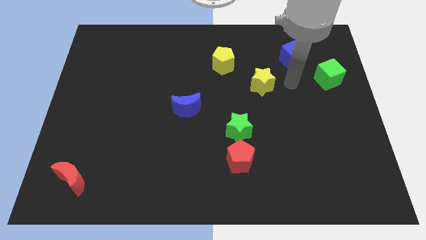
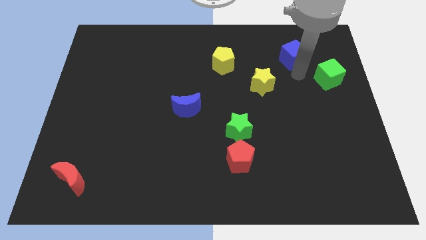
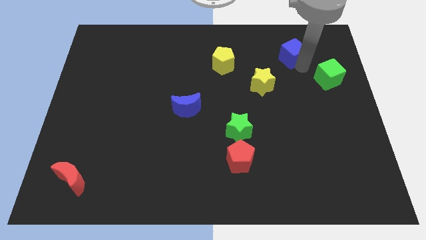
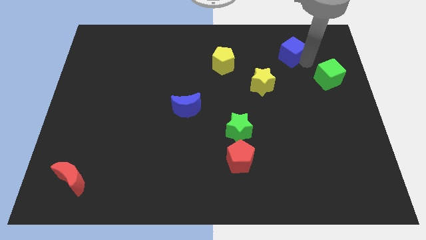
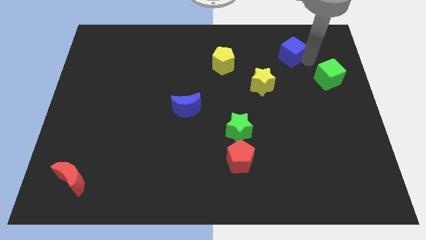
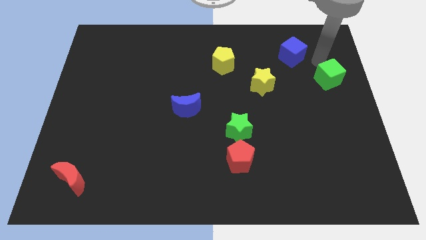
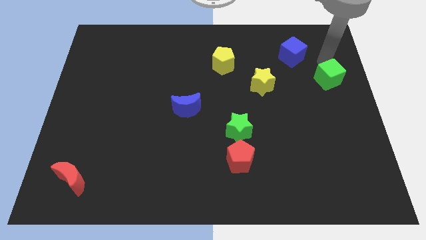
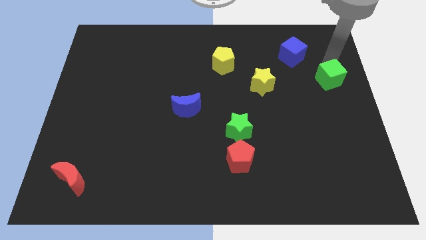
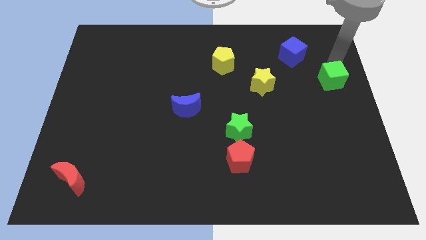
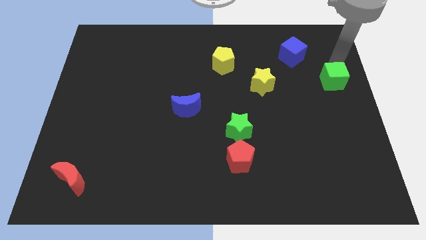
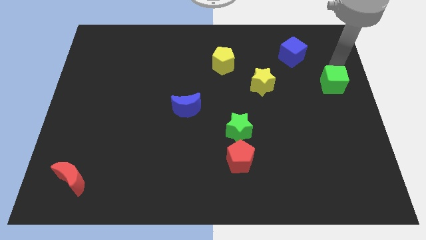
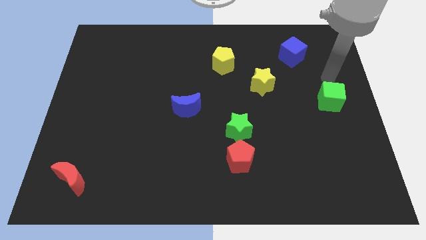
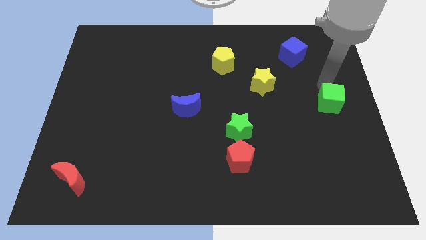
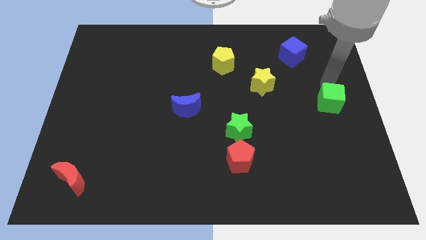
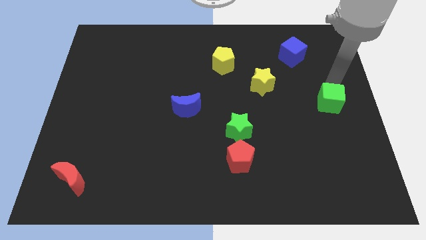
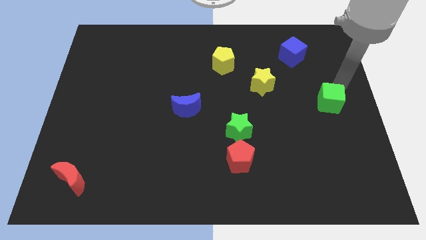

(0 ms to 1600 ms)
slightly push the green cube downwards

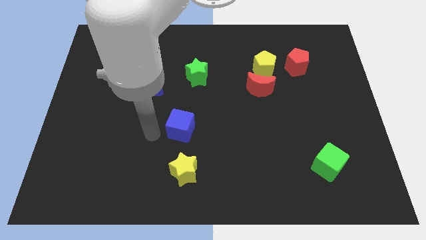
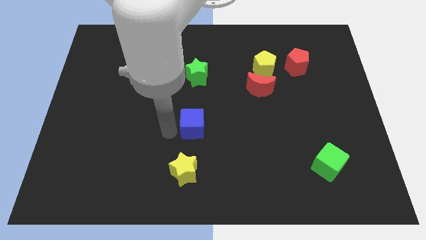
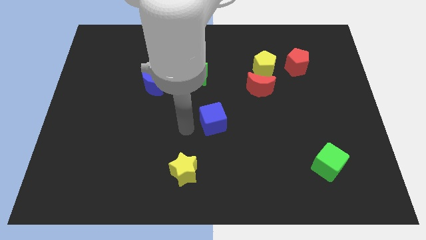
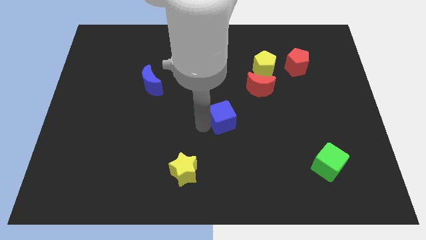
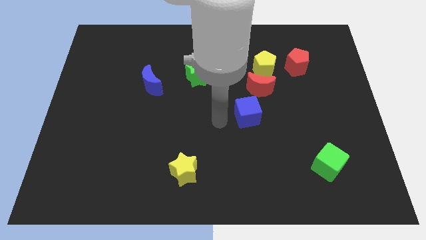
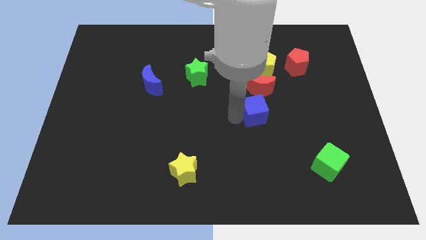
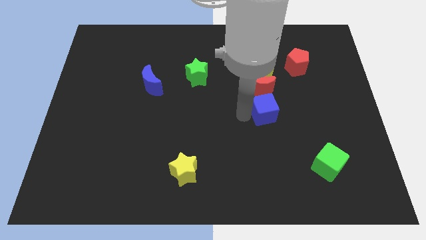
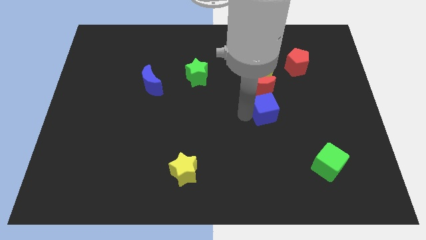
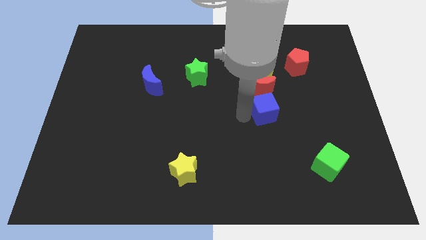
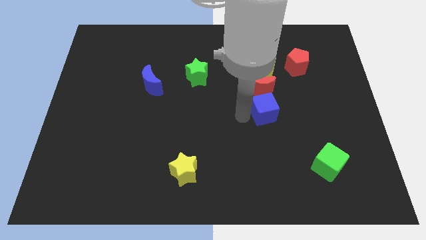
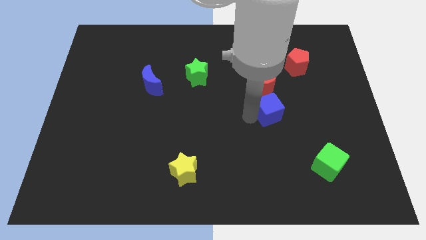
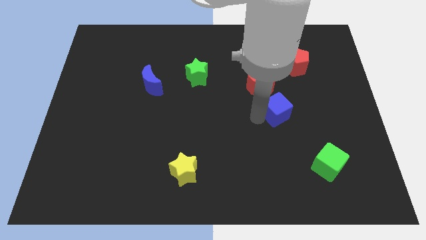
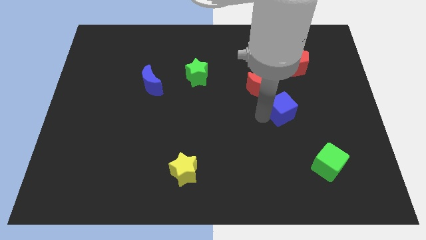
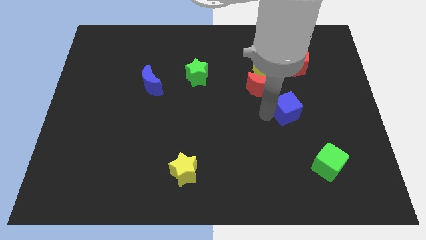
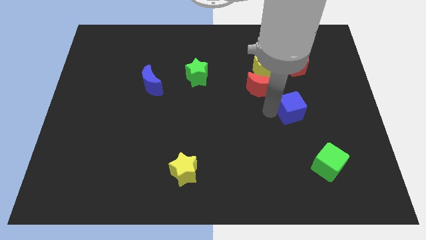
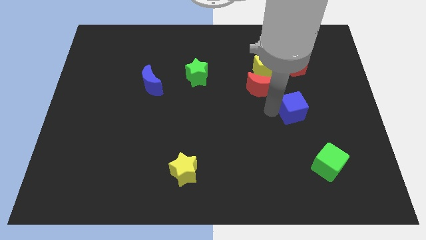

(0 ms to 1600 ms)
place the blue cube to the bottom of red pentagon

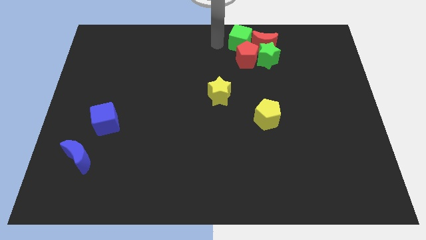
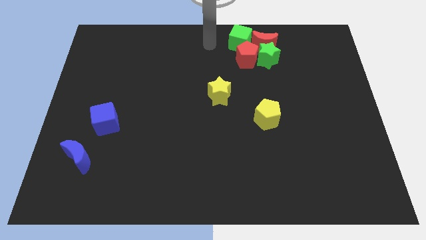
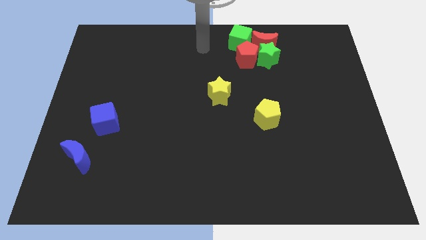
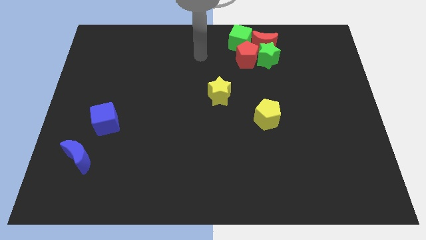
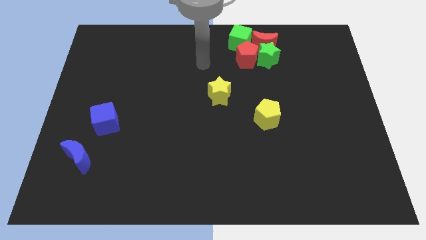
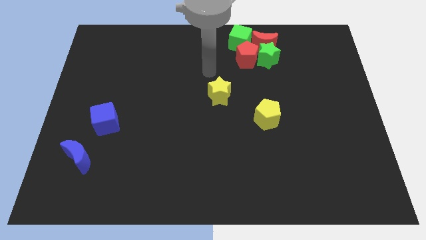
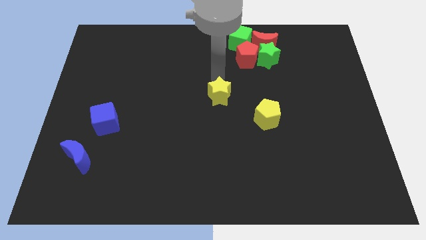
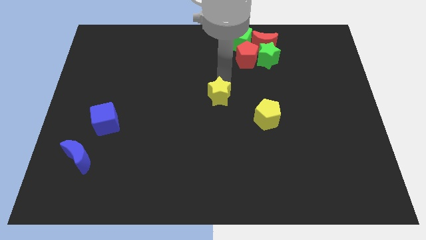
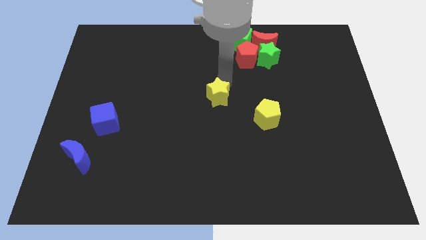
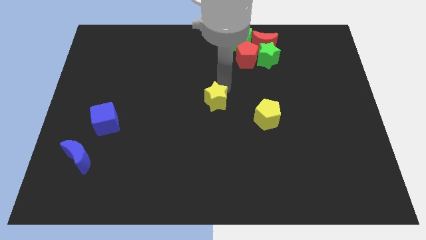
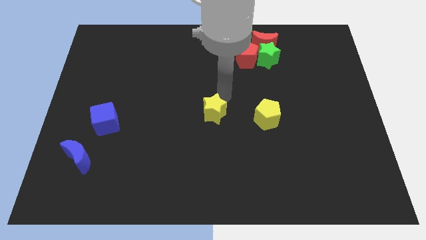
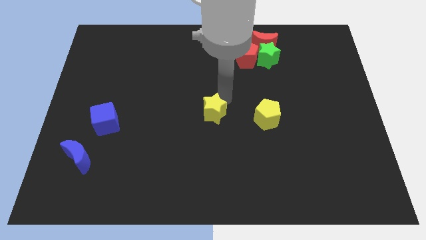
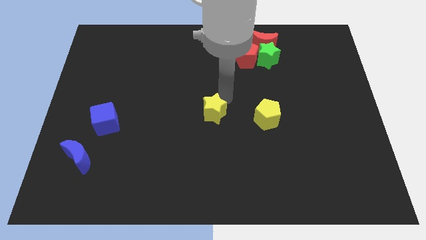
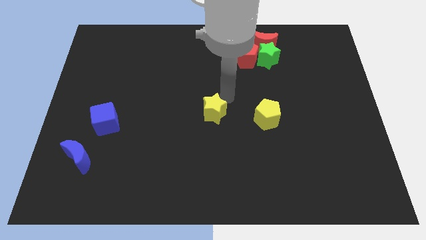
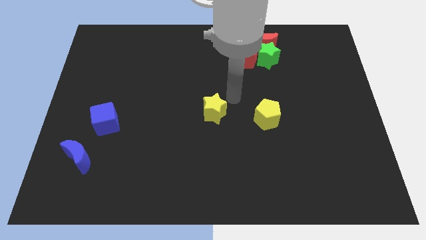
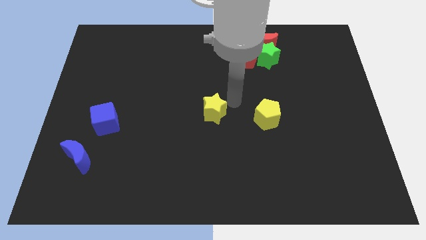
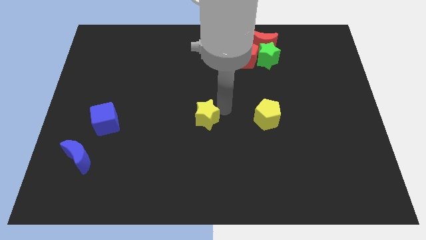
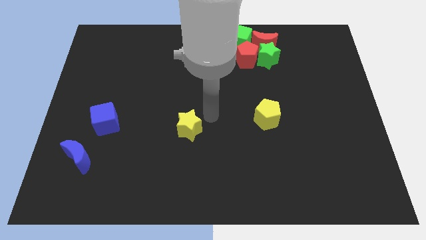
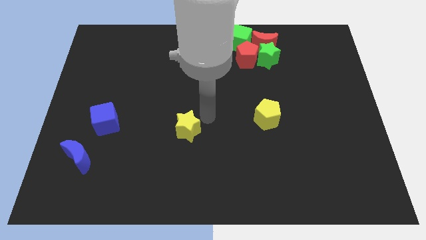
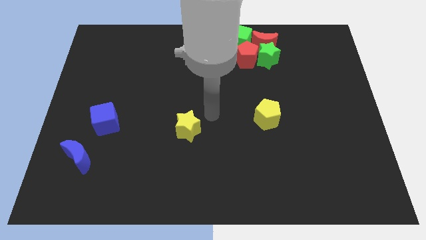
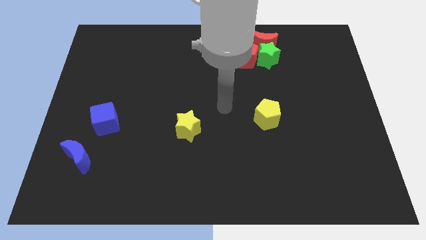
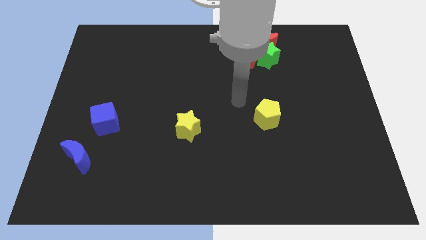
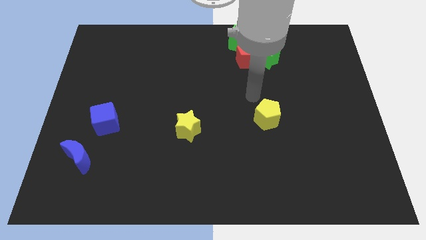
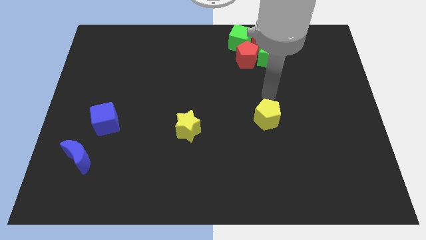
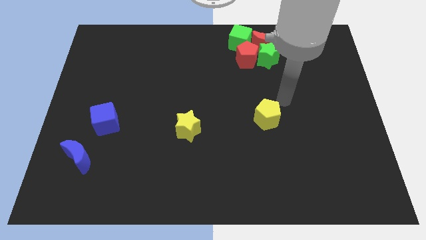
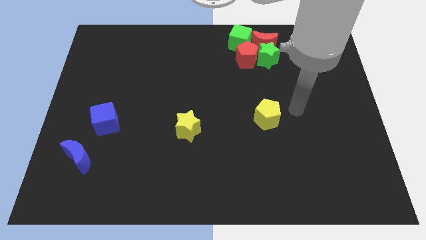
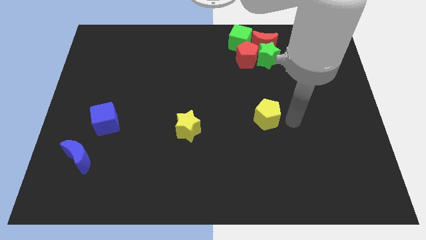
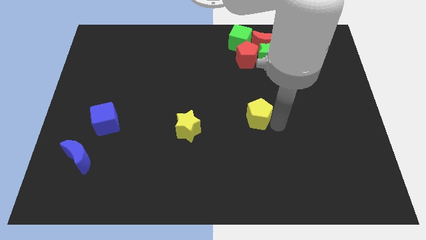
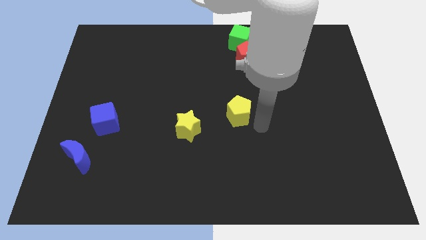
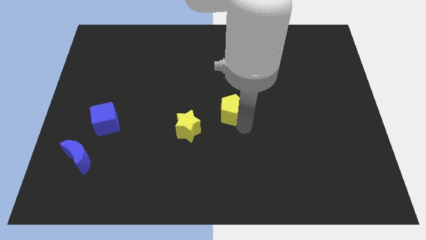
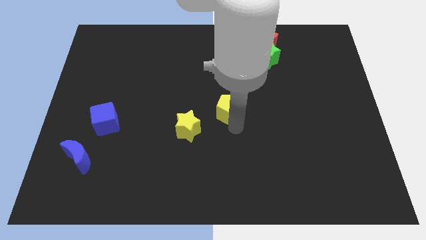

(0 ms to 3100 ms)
push yellow pentagon diagonally to the yellow star

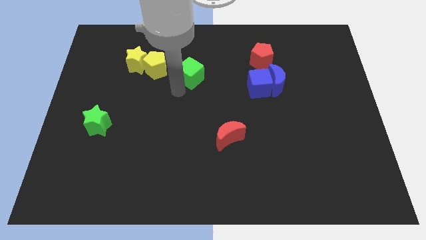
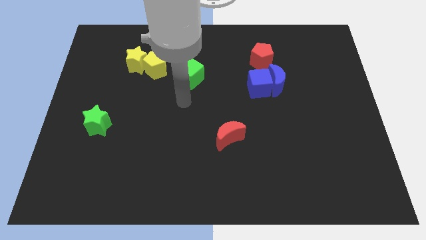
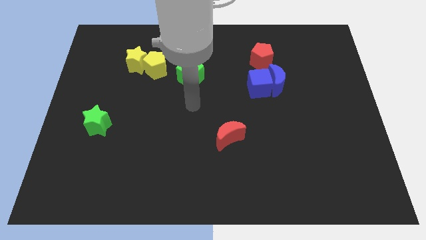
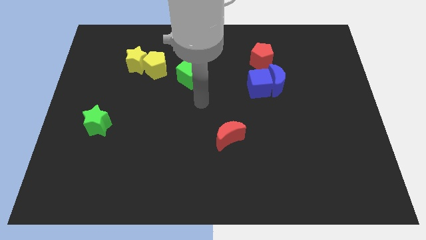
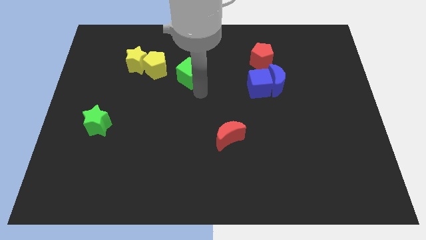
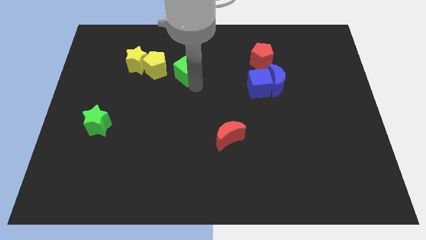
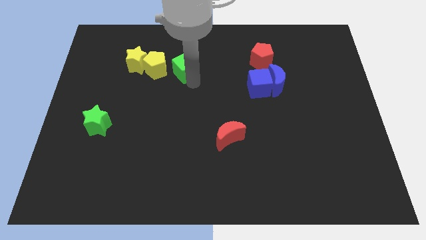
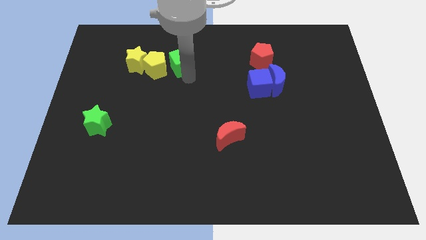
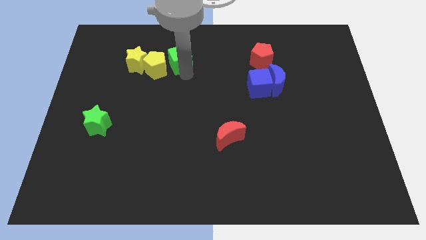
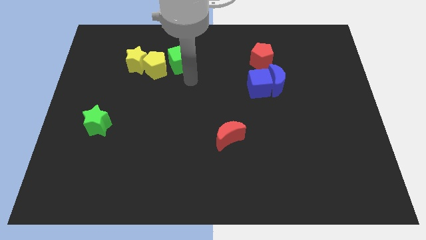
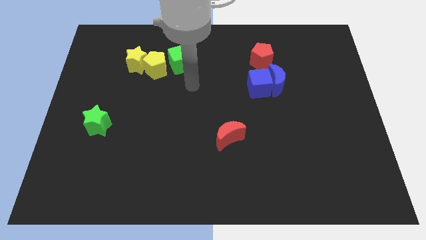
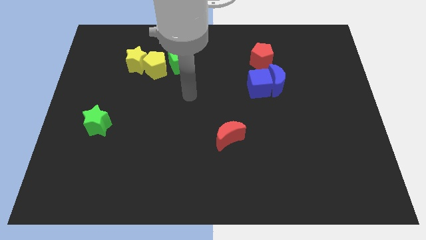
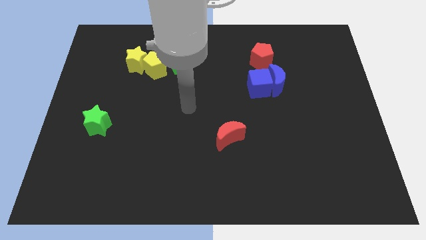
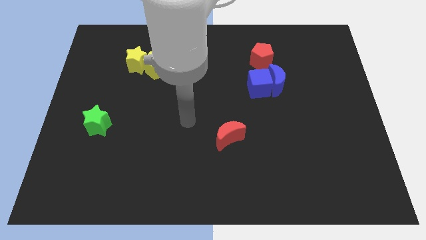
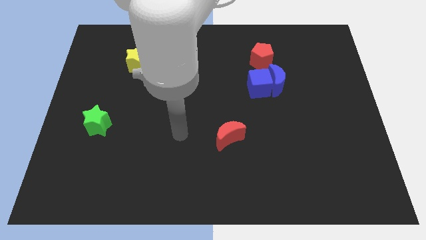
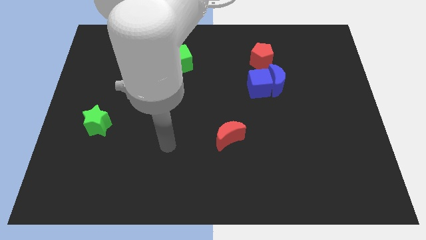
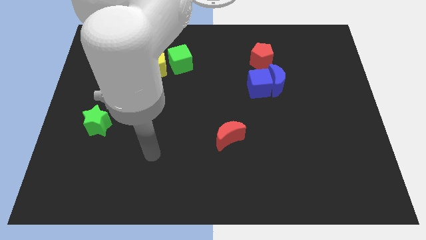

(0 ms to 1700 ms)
place green cube to the right side of the yellow star

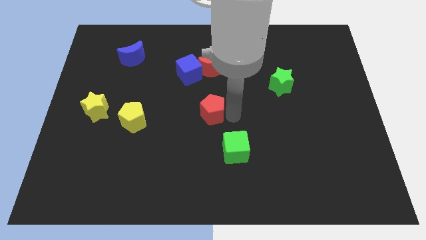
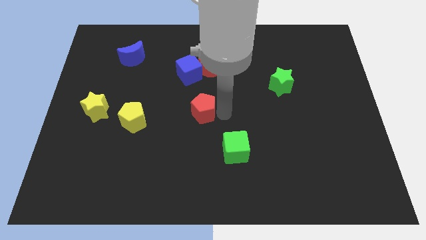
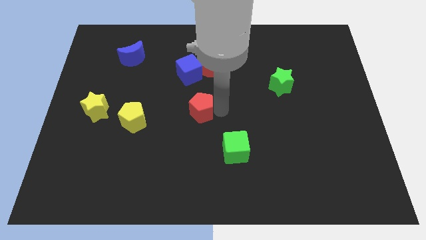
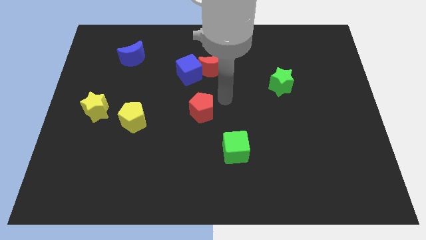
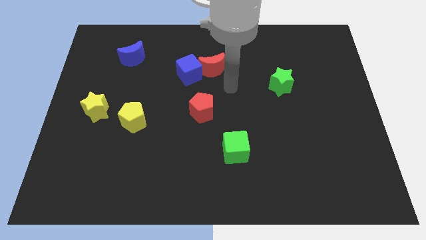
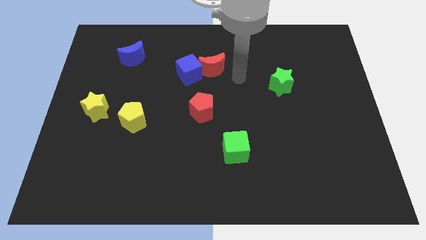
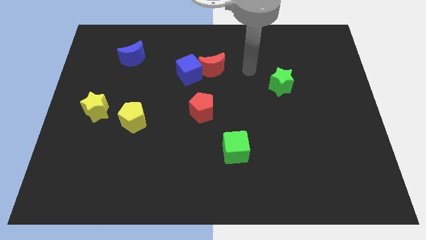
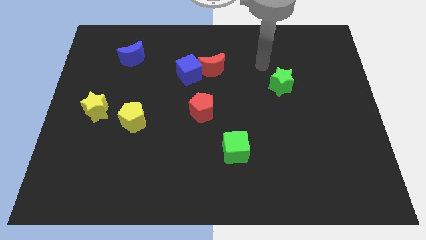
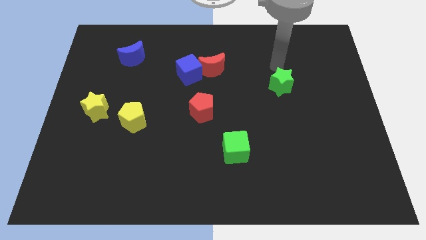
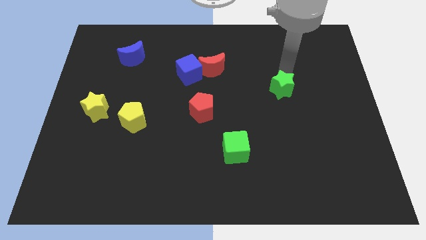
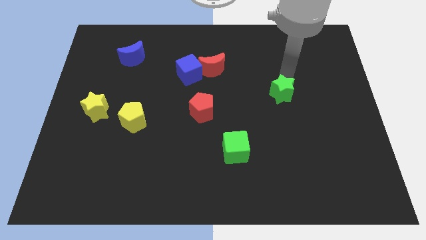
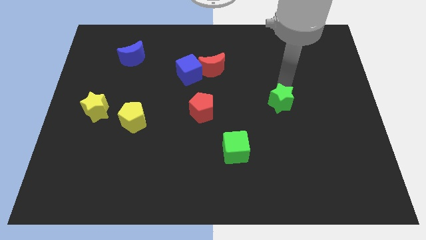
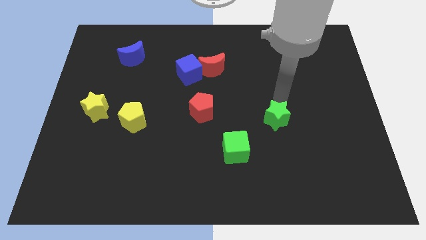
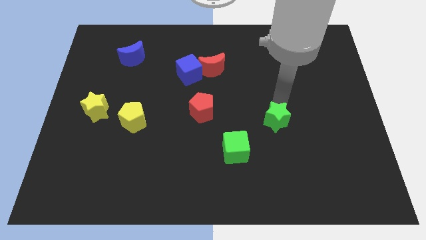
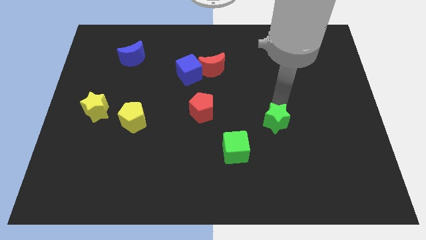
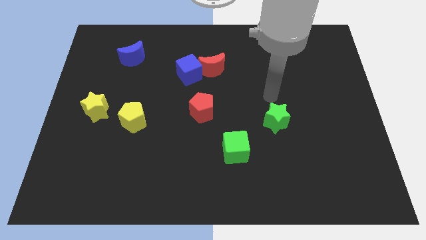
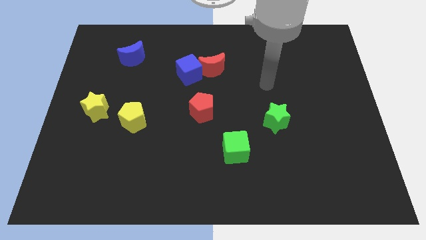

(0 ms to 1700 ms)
slightly move the green star towards down
